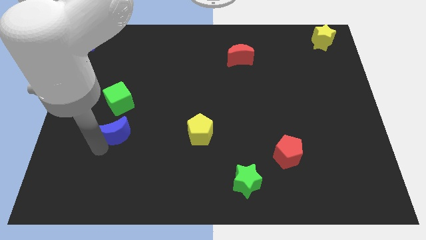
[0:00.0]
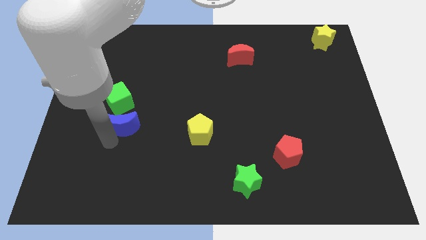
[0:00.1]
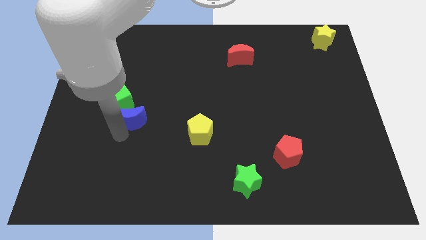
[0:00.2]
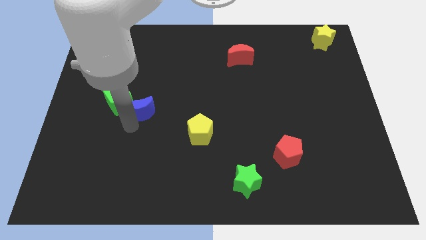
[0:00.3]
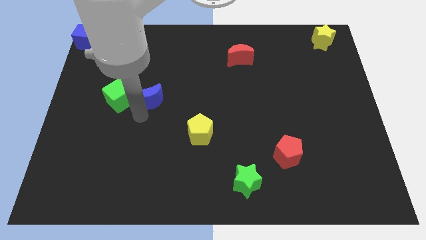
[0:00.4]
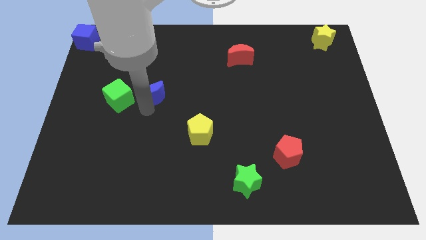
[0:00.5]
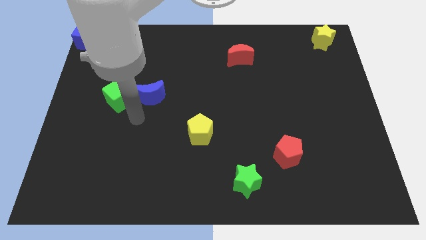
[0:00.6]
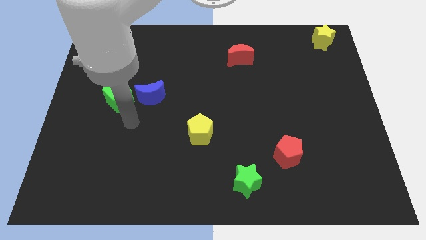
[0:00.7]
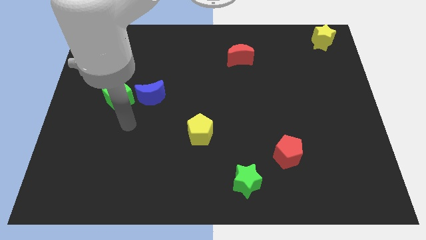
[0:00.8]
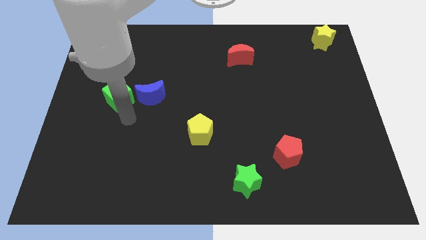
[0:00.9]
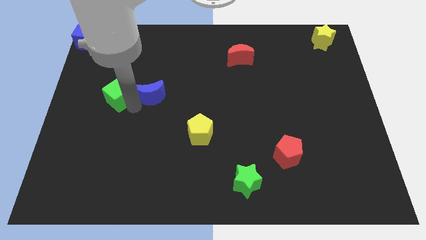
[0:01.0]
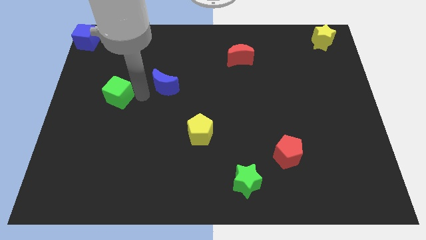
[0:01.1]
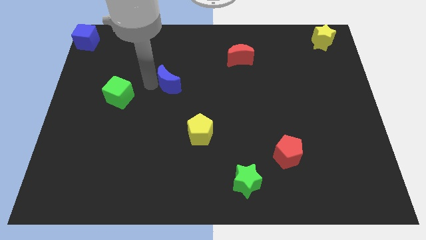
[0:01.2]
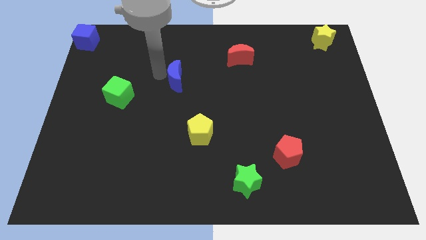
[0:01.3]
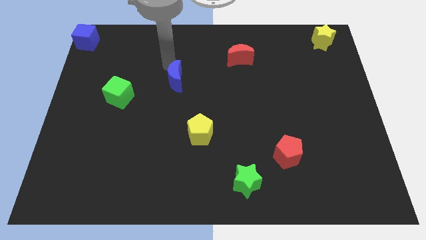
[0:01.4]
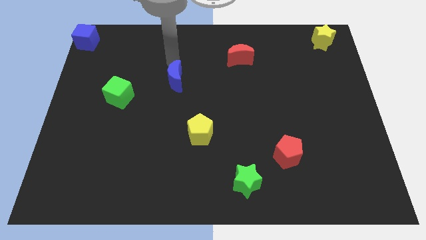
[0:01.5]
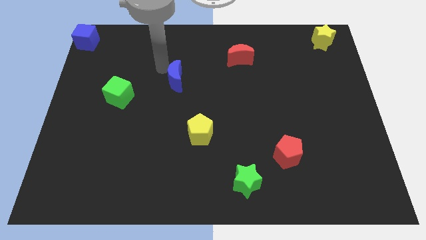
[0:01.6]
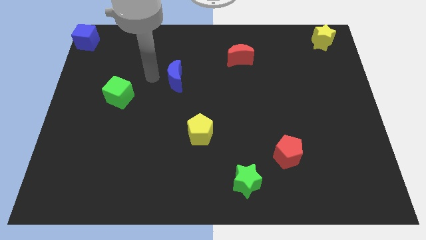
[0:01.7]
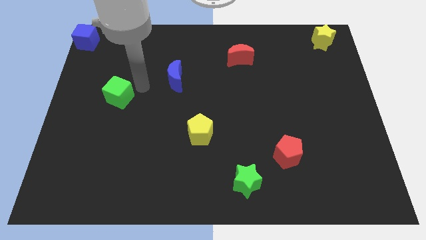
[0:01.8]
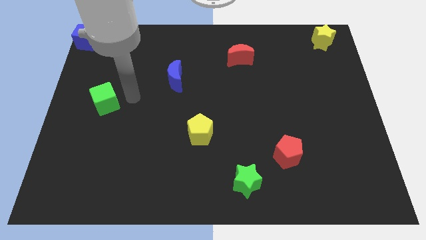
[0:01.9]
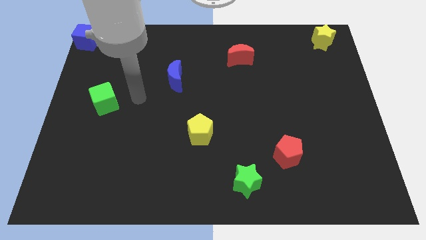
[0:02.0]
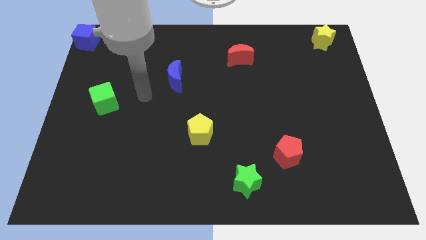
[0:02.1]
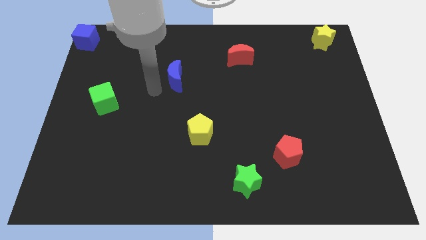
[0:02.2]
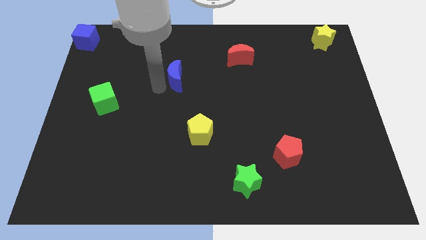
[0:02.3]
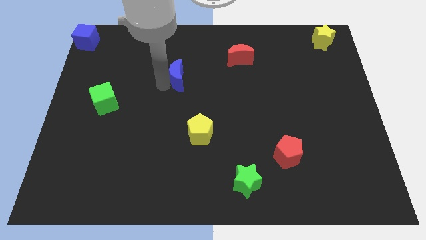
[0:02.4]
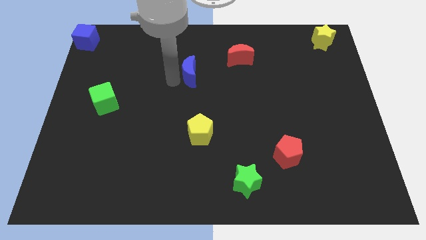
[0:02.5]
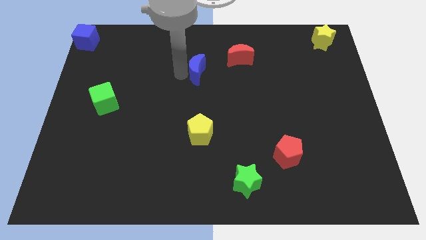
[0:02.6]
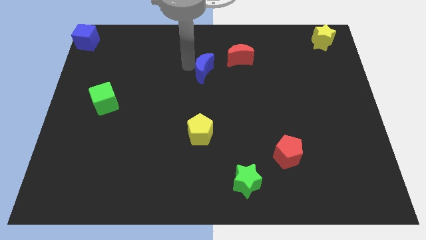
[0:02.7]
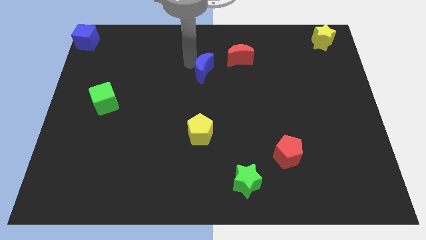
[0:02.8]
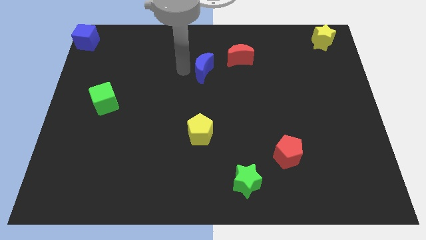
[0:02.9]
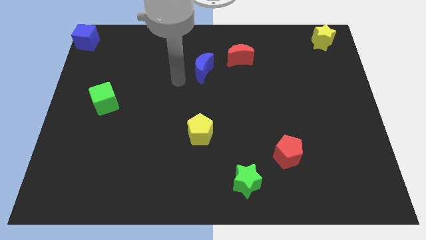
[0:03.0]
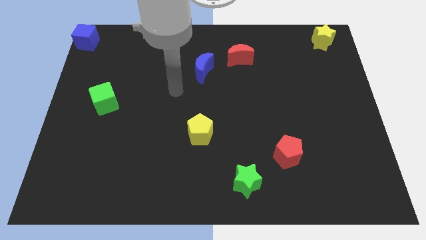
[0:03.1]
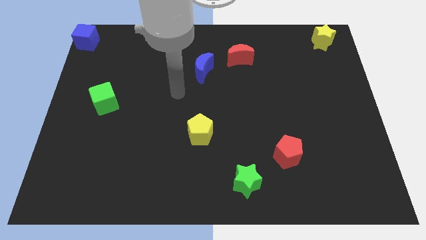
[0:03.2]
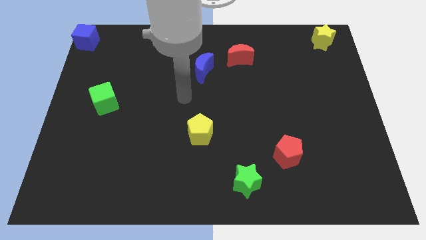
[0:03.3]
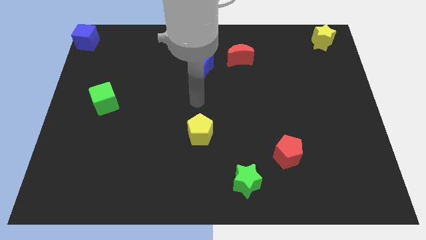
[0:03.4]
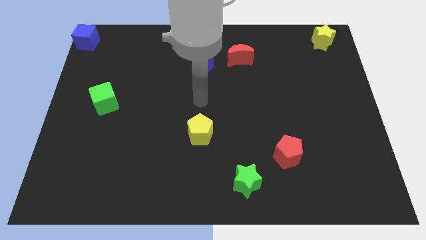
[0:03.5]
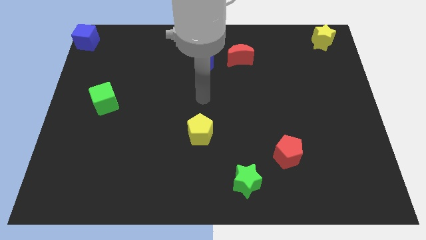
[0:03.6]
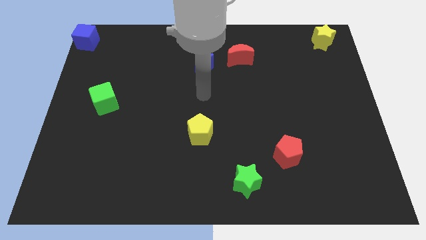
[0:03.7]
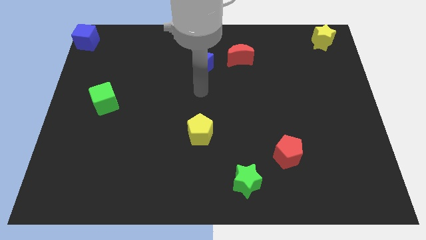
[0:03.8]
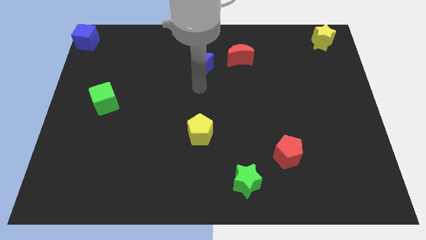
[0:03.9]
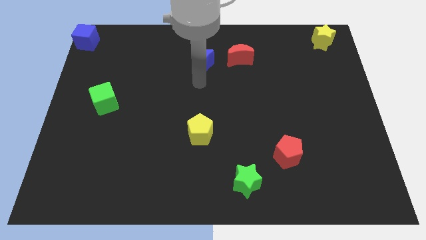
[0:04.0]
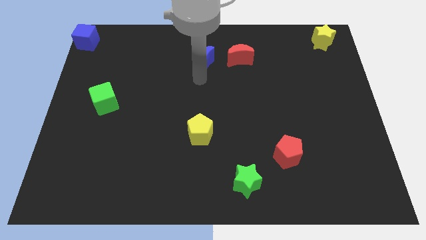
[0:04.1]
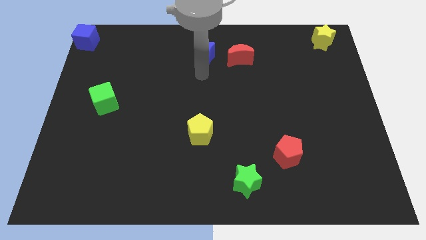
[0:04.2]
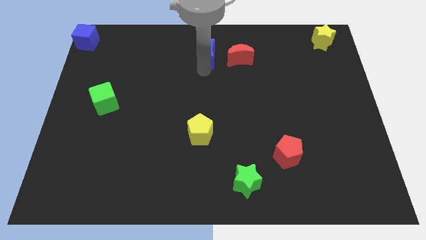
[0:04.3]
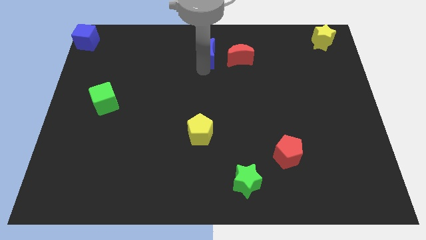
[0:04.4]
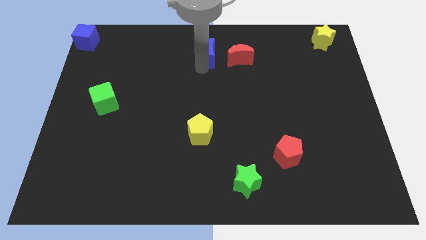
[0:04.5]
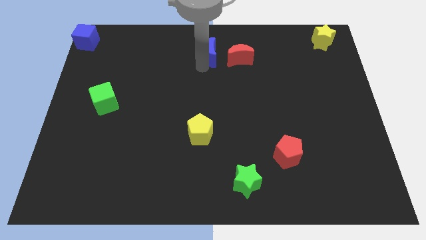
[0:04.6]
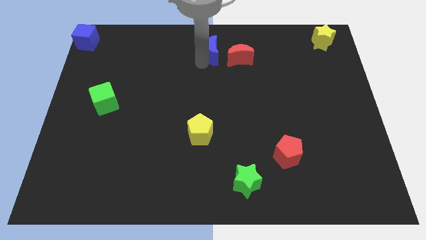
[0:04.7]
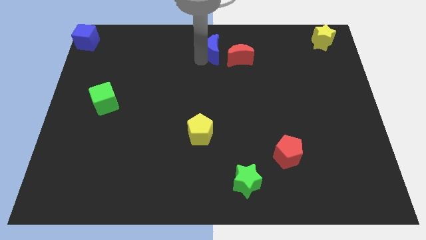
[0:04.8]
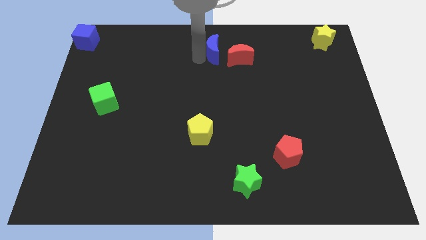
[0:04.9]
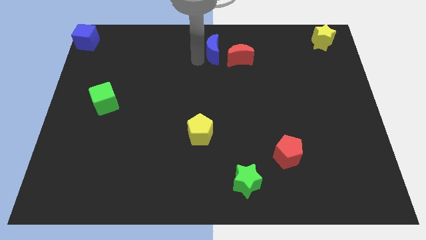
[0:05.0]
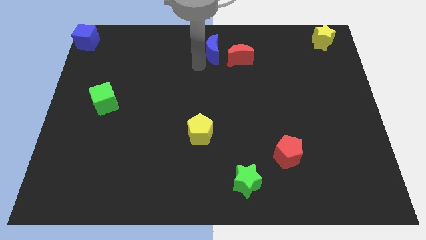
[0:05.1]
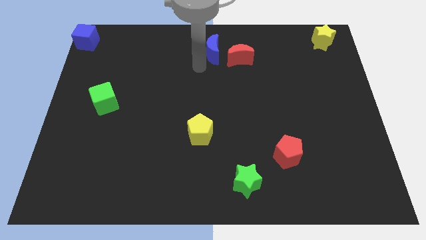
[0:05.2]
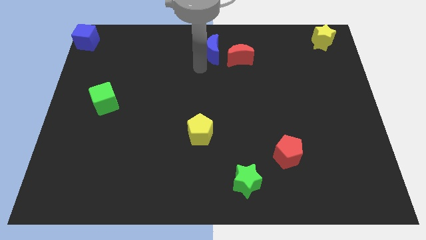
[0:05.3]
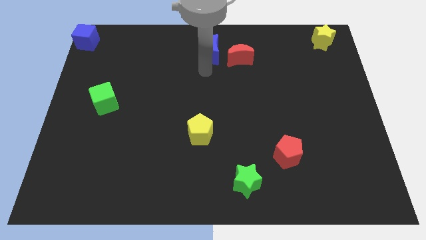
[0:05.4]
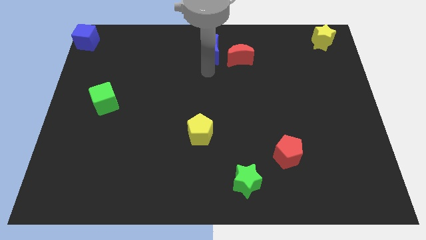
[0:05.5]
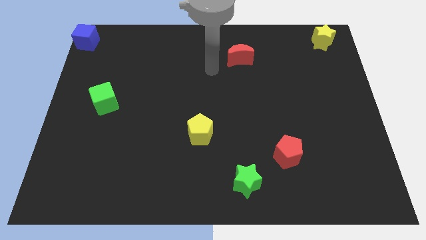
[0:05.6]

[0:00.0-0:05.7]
place the blue crescent to the left of the red crescent

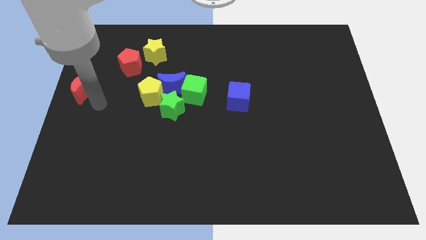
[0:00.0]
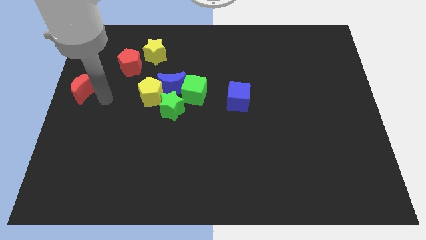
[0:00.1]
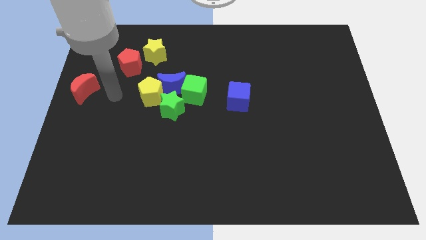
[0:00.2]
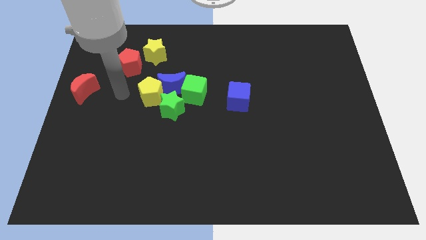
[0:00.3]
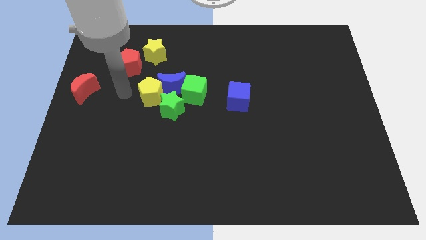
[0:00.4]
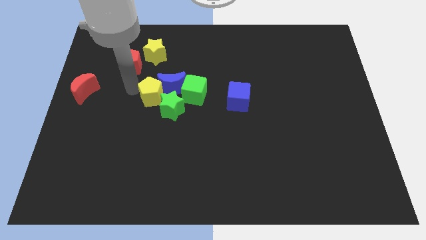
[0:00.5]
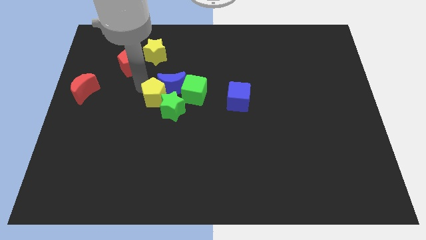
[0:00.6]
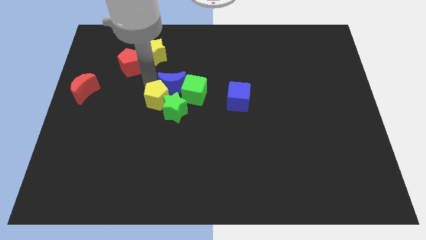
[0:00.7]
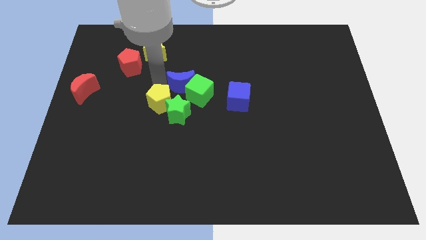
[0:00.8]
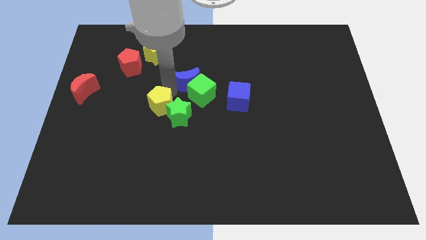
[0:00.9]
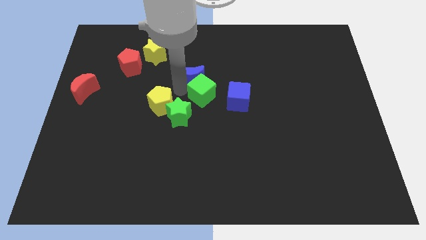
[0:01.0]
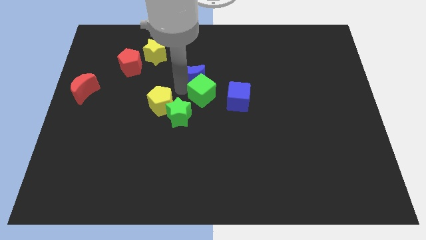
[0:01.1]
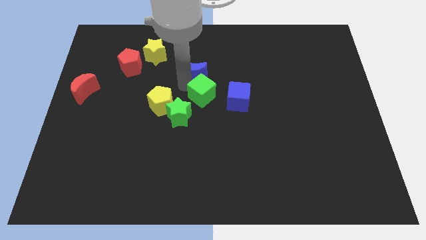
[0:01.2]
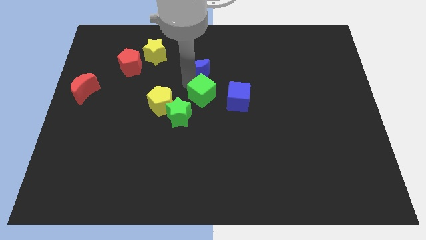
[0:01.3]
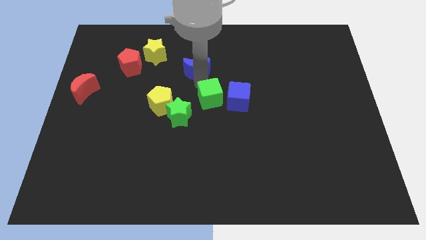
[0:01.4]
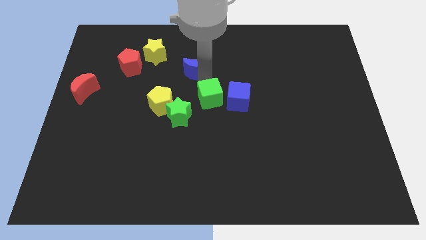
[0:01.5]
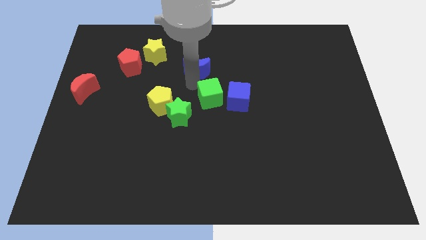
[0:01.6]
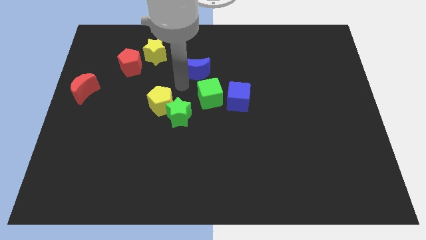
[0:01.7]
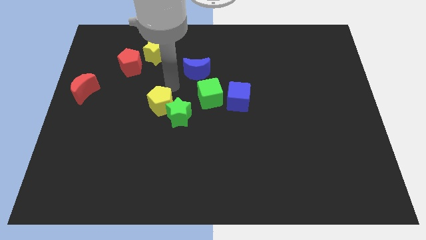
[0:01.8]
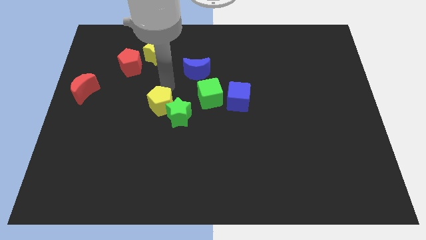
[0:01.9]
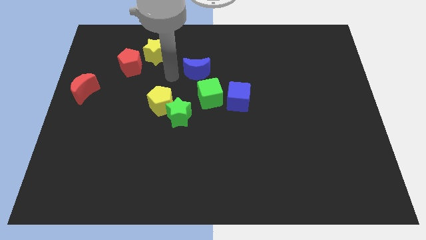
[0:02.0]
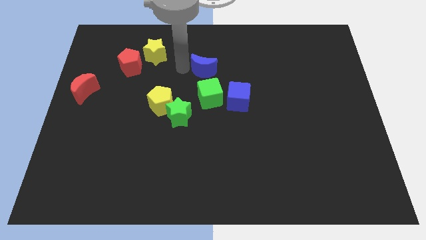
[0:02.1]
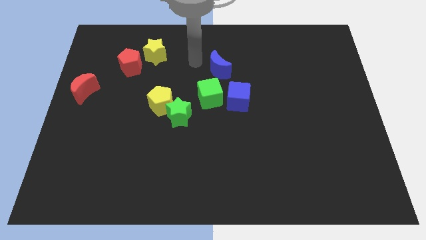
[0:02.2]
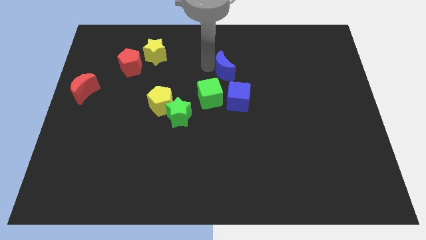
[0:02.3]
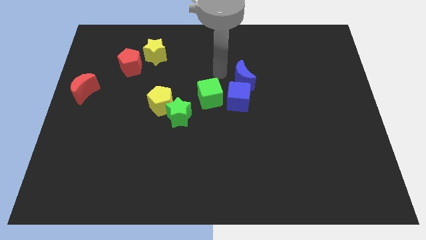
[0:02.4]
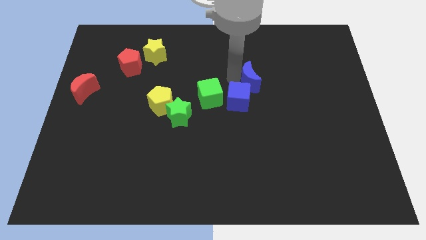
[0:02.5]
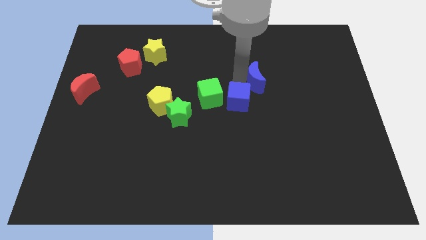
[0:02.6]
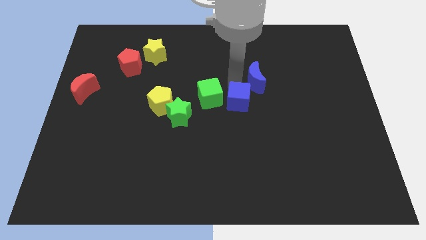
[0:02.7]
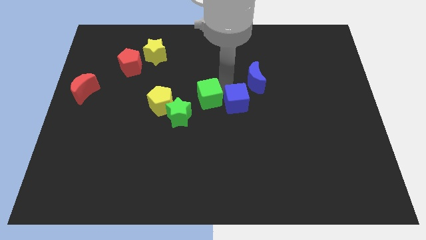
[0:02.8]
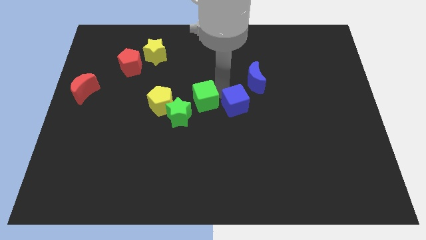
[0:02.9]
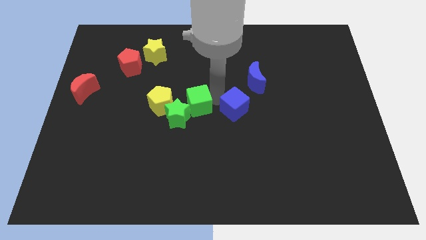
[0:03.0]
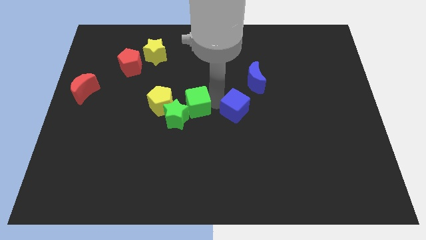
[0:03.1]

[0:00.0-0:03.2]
separate the blue crescent from the group of blocks
